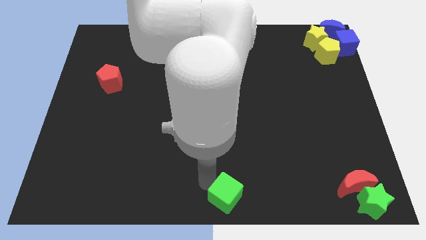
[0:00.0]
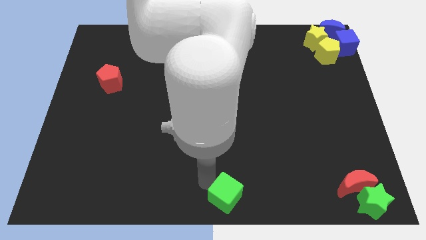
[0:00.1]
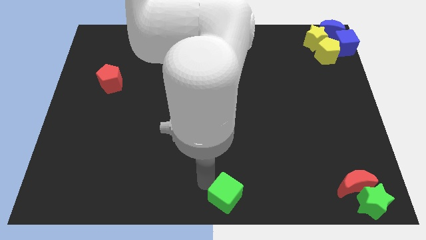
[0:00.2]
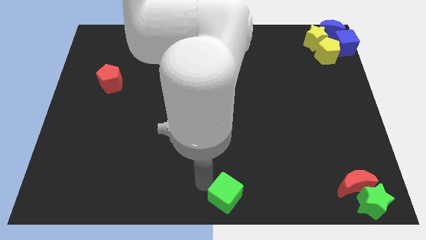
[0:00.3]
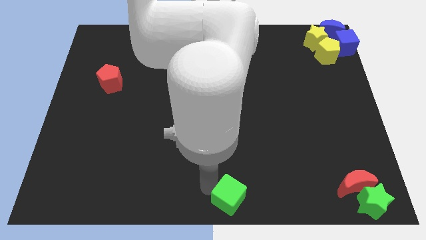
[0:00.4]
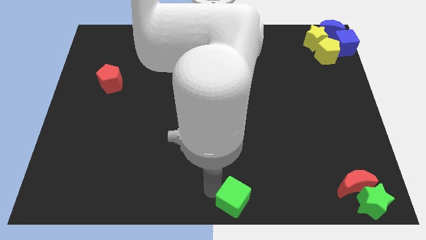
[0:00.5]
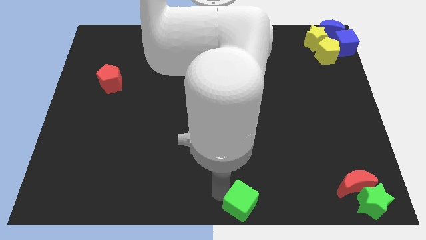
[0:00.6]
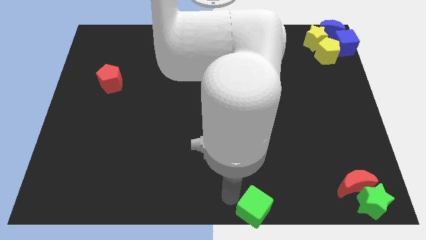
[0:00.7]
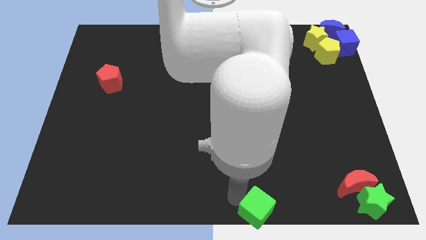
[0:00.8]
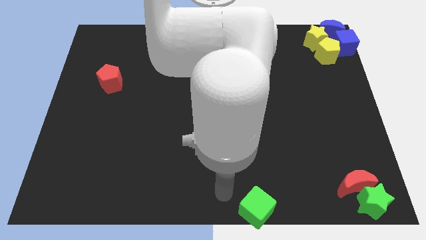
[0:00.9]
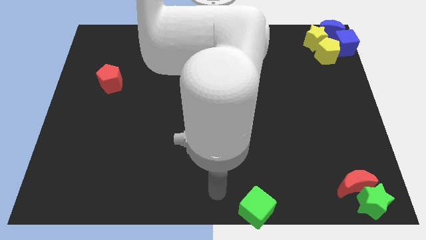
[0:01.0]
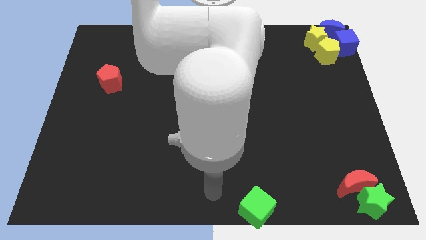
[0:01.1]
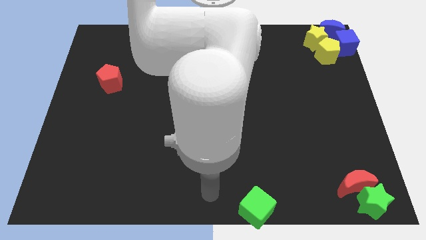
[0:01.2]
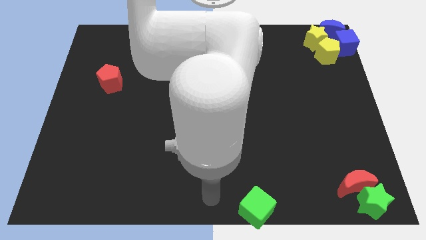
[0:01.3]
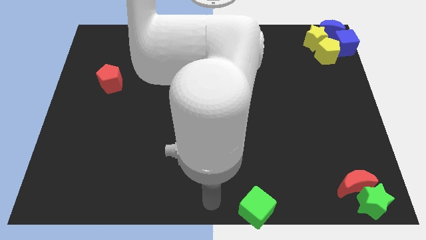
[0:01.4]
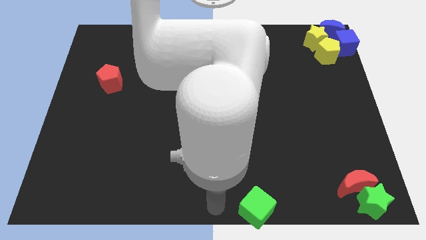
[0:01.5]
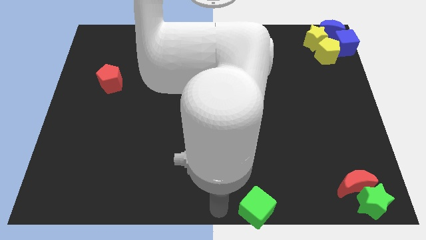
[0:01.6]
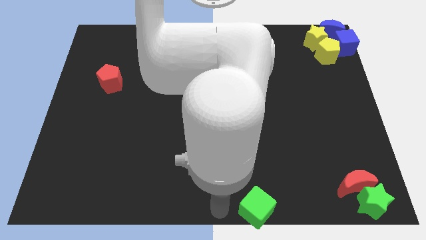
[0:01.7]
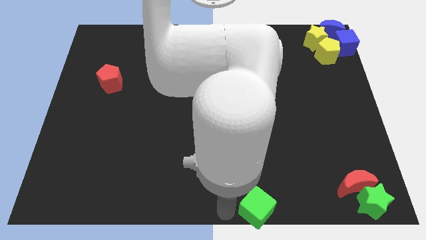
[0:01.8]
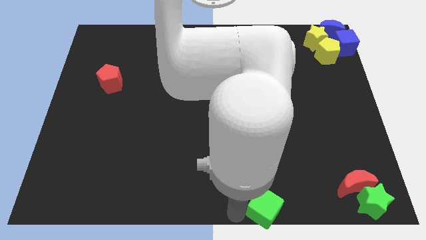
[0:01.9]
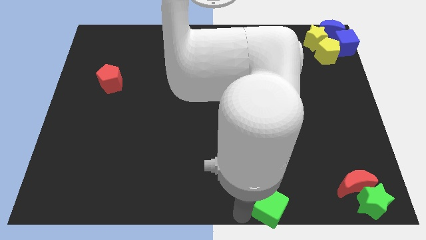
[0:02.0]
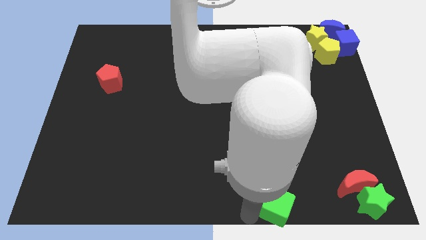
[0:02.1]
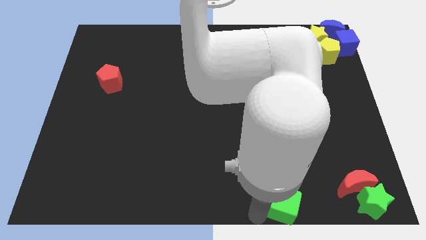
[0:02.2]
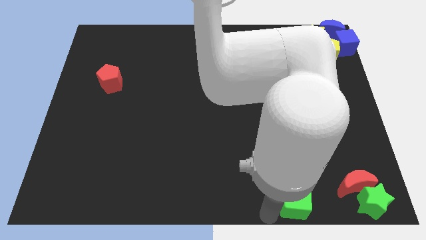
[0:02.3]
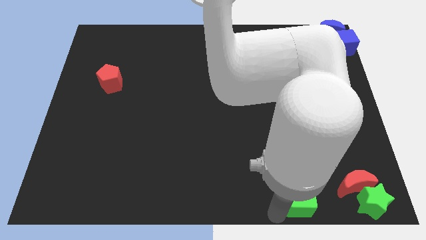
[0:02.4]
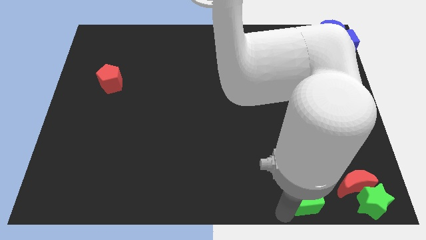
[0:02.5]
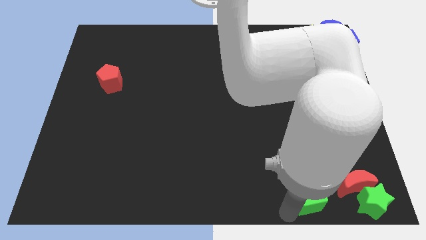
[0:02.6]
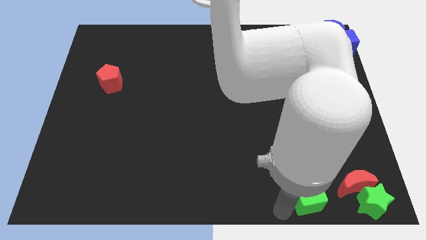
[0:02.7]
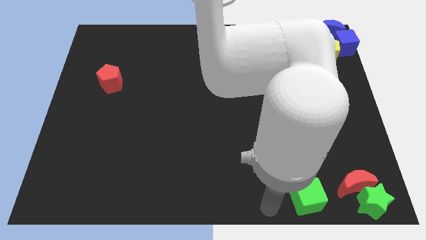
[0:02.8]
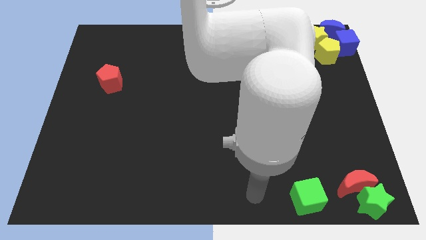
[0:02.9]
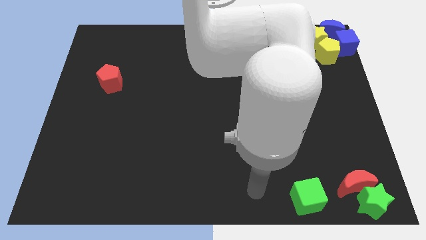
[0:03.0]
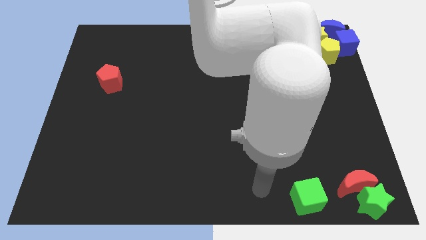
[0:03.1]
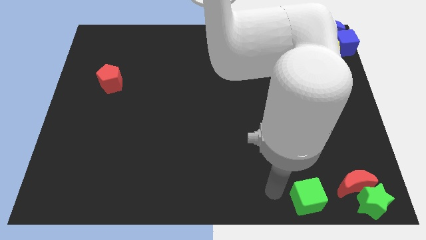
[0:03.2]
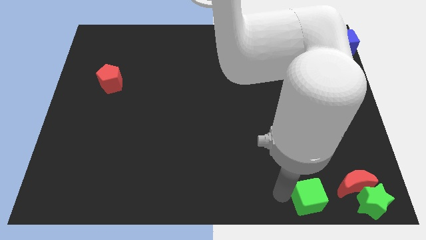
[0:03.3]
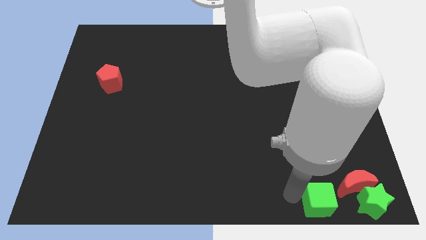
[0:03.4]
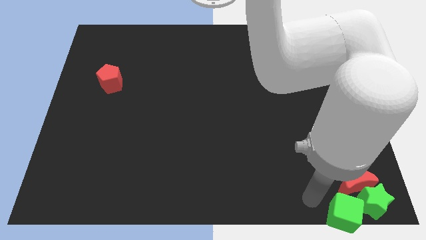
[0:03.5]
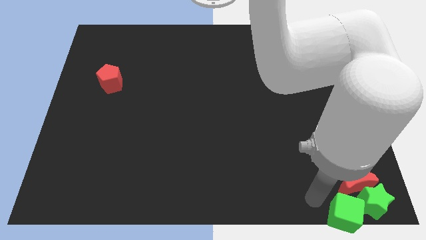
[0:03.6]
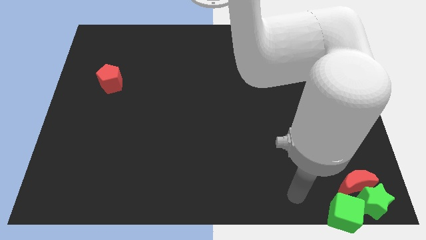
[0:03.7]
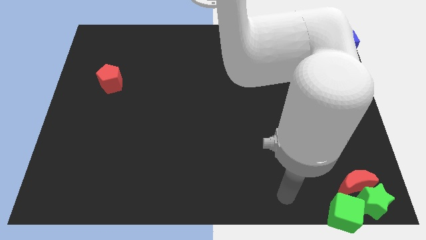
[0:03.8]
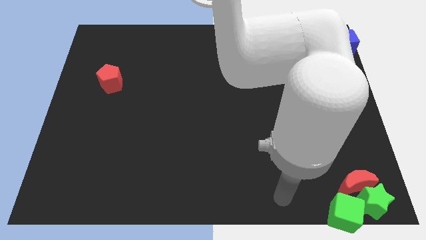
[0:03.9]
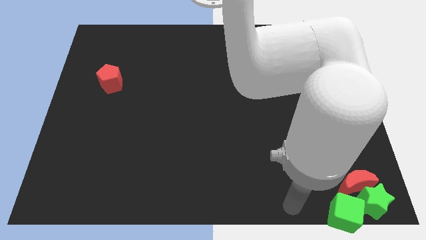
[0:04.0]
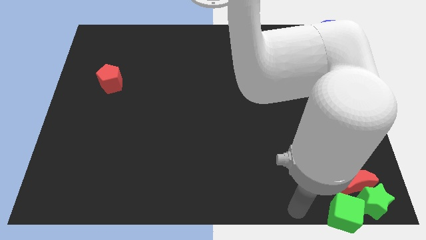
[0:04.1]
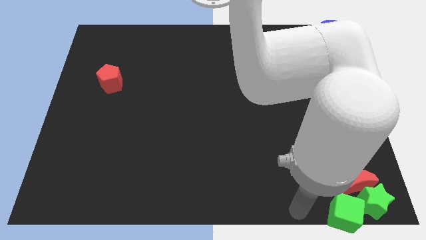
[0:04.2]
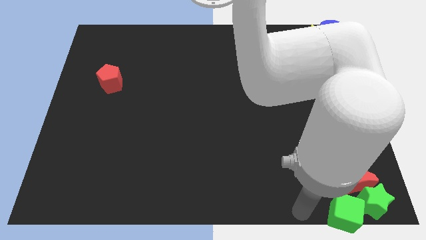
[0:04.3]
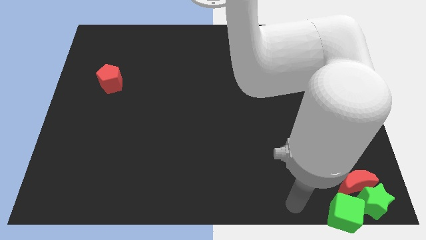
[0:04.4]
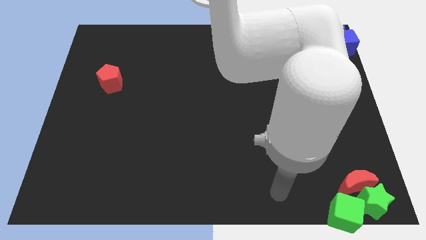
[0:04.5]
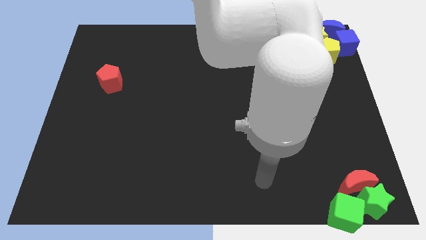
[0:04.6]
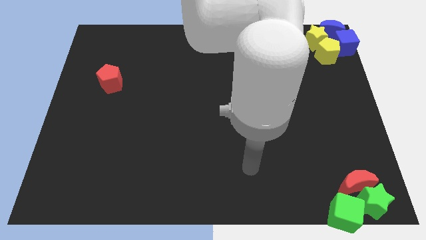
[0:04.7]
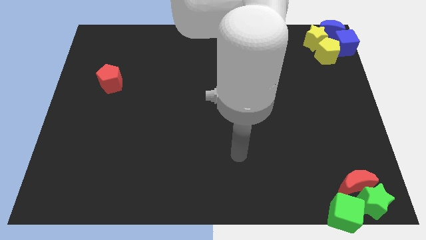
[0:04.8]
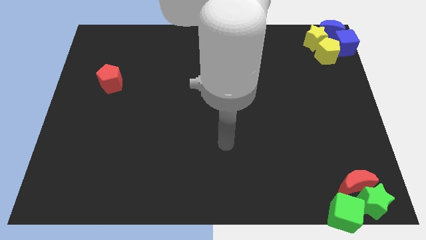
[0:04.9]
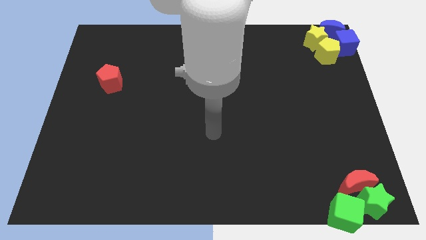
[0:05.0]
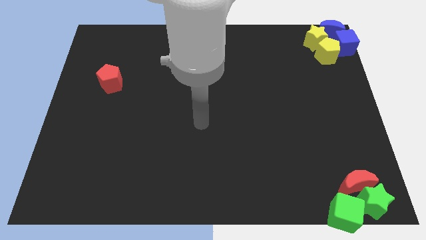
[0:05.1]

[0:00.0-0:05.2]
push the green cube into the group of objects

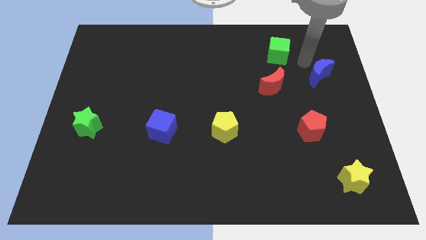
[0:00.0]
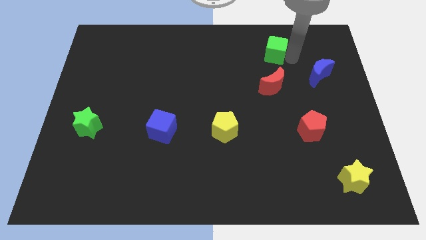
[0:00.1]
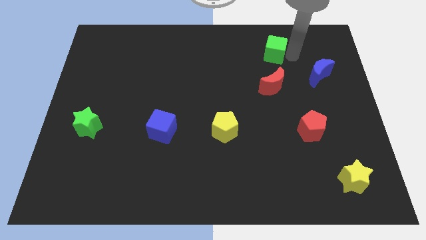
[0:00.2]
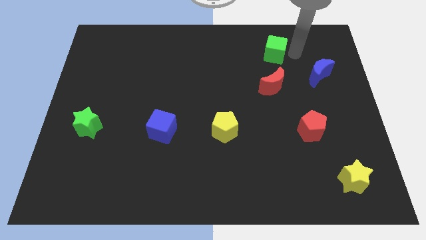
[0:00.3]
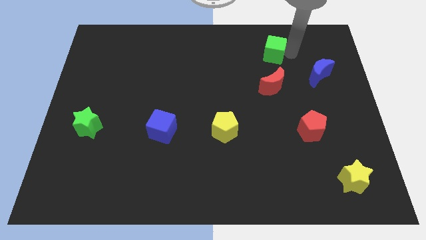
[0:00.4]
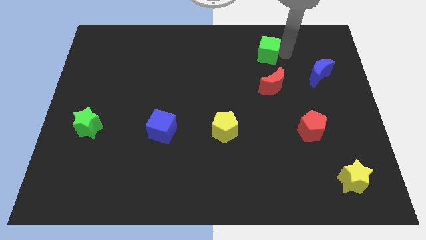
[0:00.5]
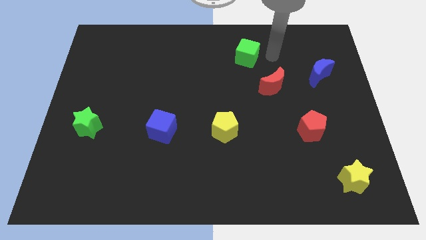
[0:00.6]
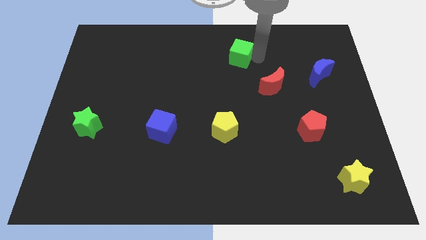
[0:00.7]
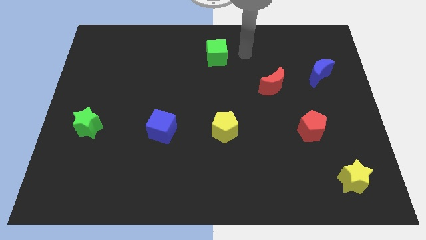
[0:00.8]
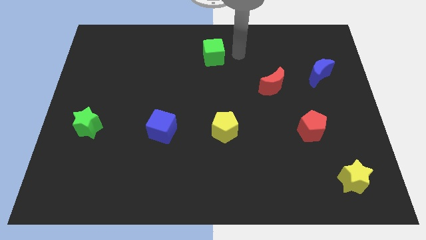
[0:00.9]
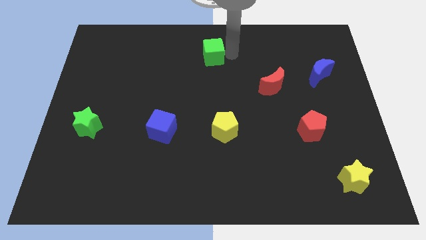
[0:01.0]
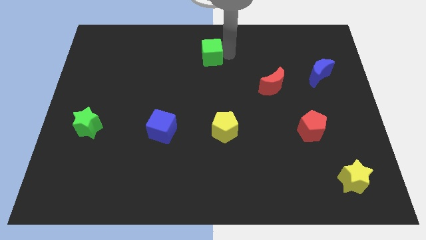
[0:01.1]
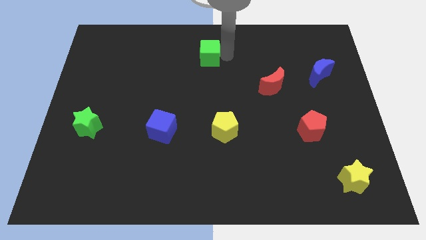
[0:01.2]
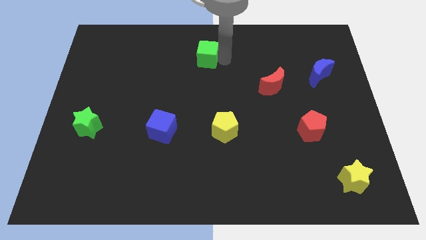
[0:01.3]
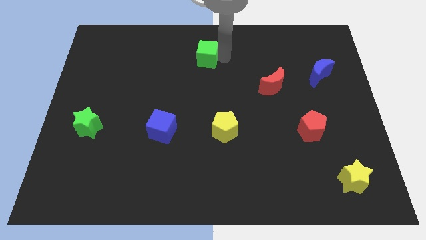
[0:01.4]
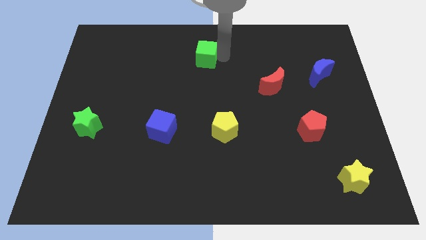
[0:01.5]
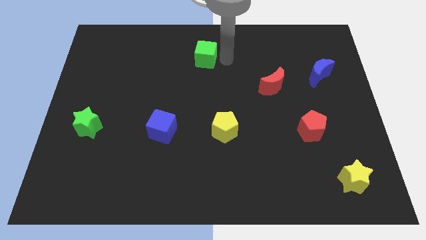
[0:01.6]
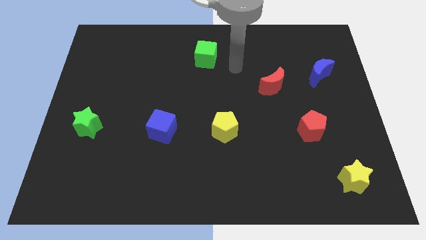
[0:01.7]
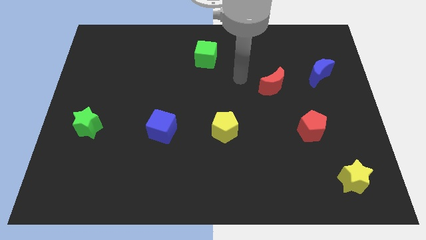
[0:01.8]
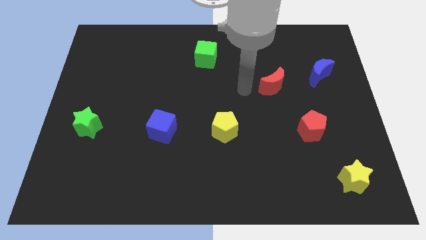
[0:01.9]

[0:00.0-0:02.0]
place the green cube on the top middle

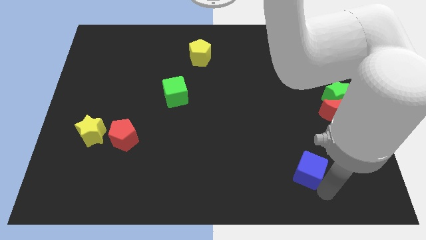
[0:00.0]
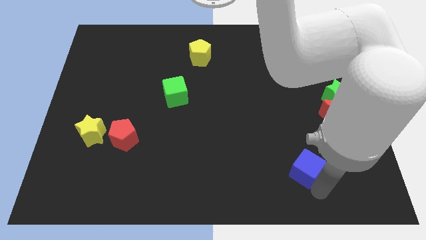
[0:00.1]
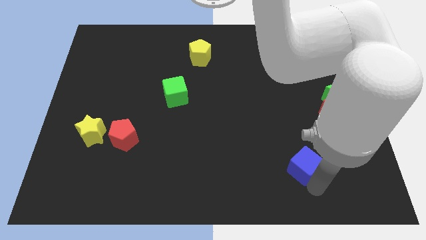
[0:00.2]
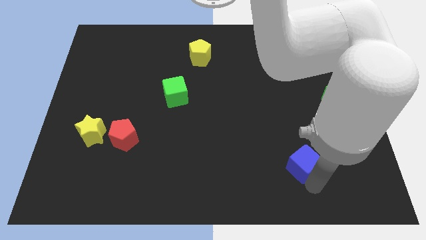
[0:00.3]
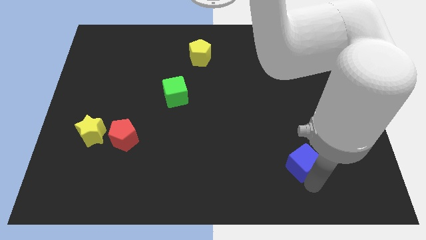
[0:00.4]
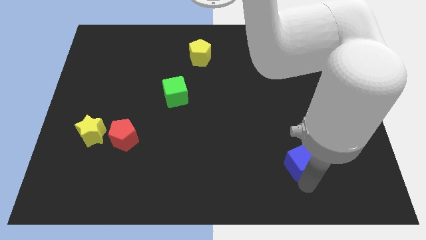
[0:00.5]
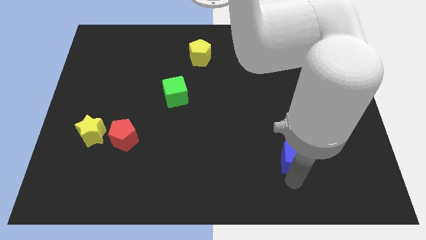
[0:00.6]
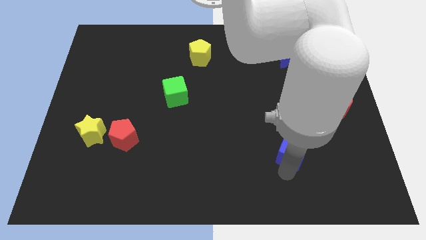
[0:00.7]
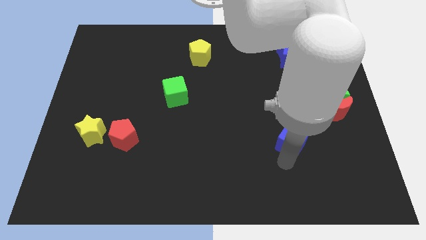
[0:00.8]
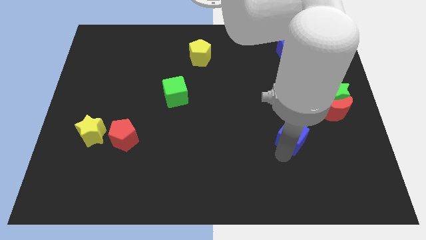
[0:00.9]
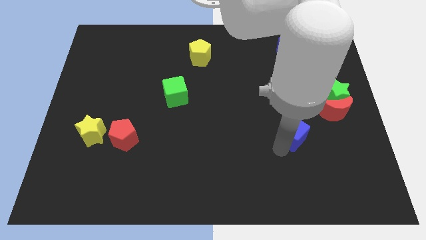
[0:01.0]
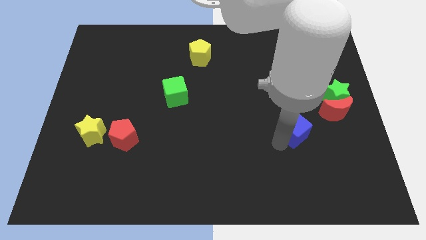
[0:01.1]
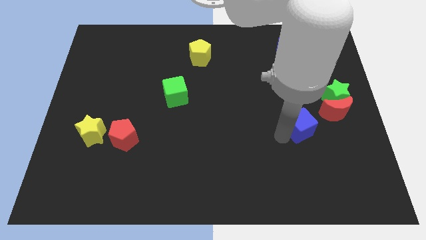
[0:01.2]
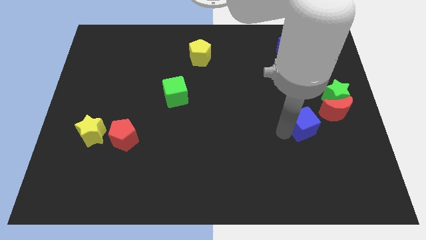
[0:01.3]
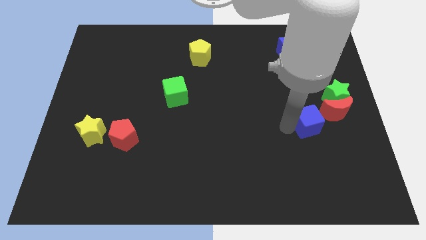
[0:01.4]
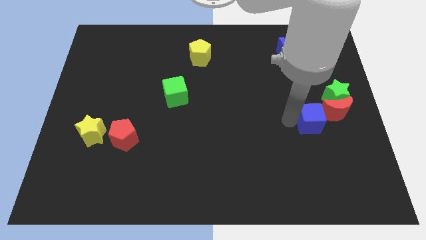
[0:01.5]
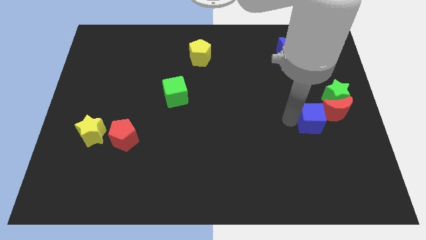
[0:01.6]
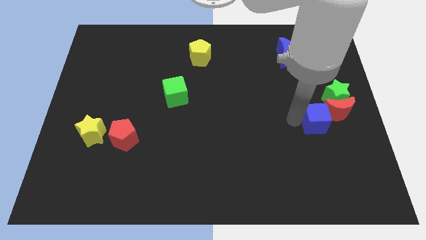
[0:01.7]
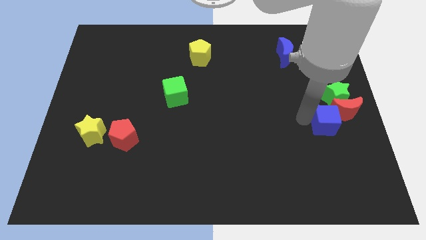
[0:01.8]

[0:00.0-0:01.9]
move the blue cube into the left side of the red crescent
